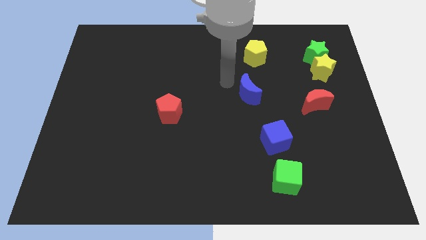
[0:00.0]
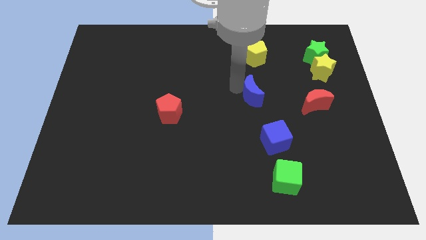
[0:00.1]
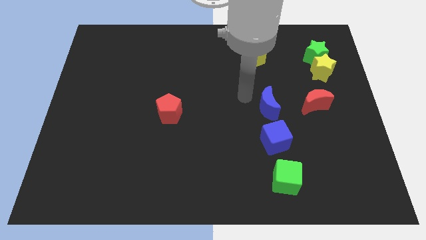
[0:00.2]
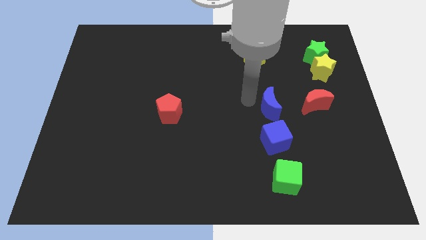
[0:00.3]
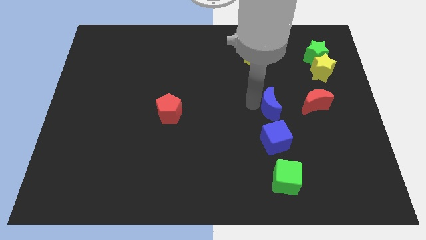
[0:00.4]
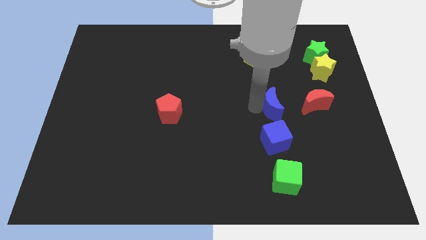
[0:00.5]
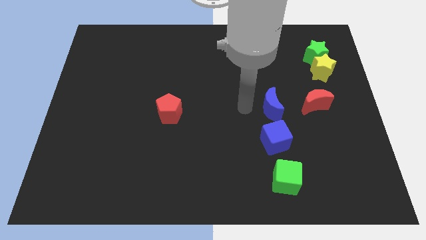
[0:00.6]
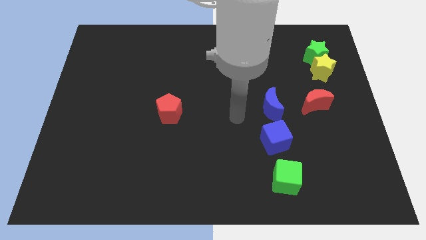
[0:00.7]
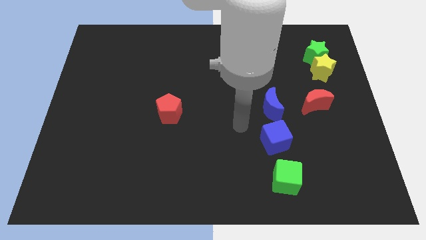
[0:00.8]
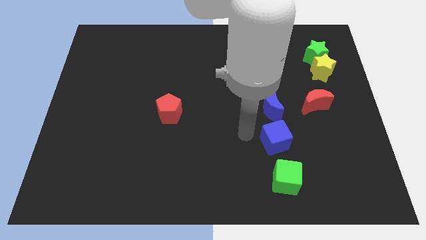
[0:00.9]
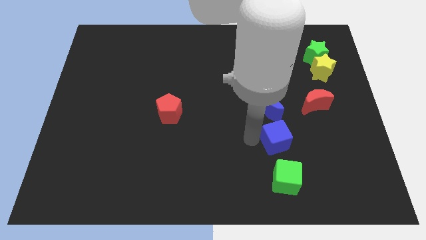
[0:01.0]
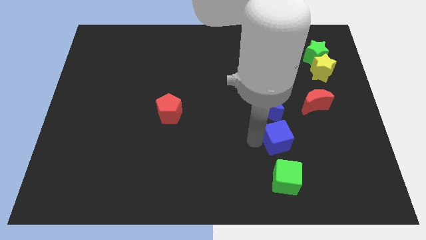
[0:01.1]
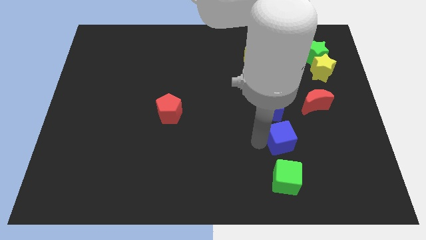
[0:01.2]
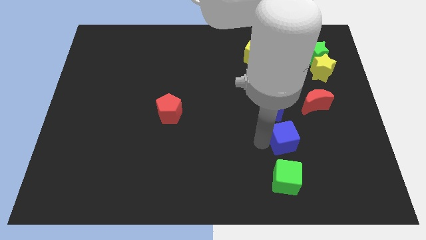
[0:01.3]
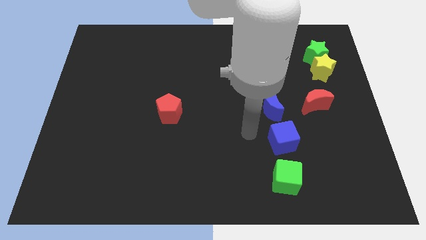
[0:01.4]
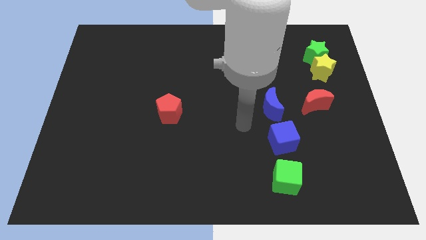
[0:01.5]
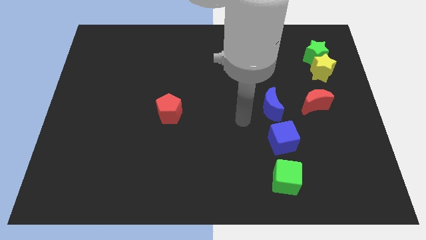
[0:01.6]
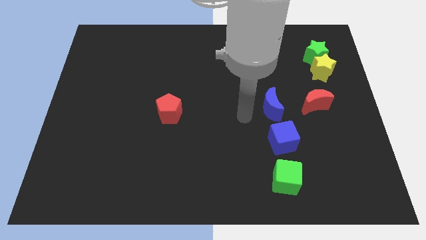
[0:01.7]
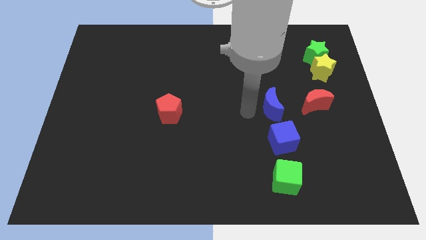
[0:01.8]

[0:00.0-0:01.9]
push blue crescent towards the blue cube

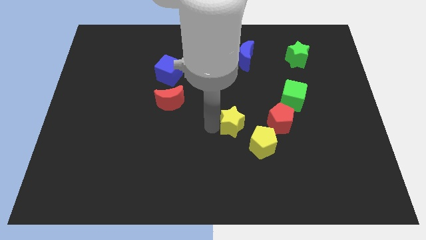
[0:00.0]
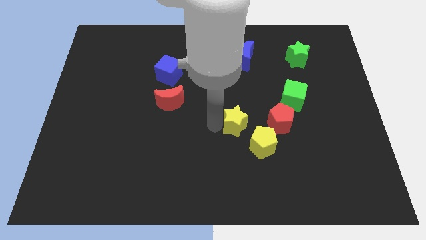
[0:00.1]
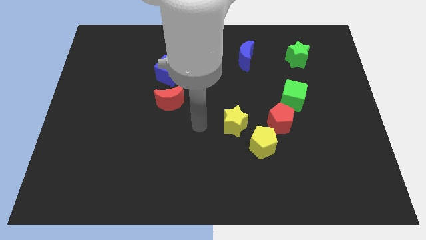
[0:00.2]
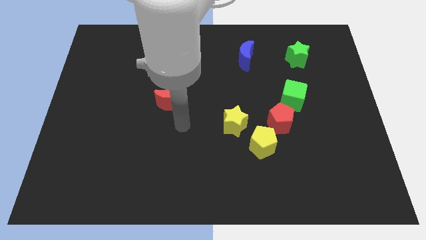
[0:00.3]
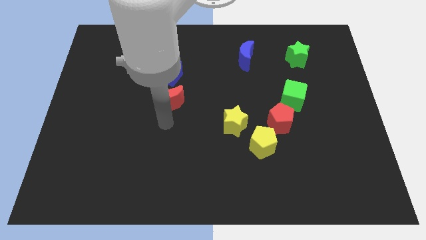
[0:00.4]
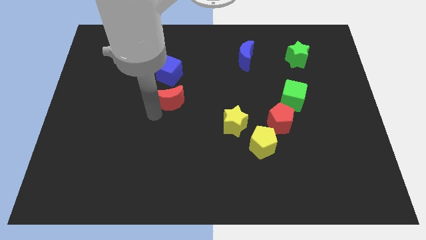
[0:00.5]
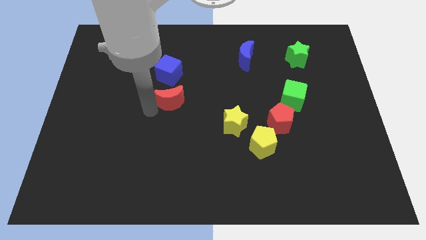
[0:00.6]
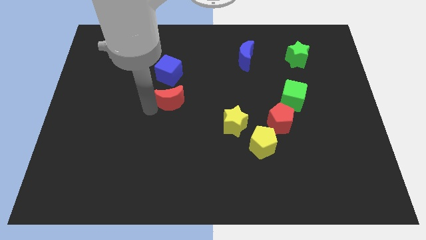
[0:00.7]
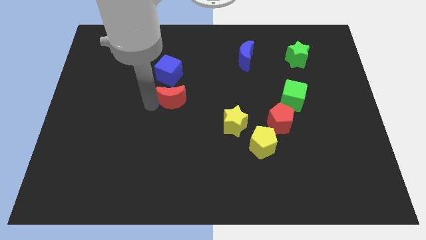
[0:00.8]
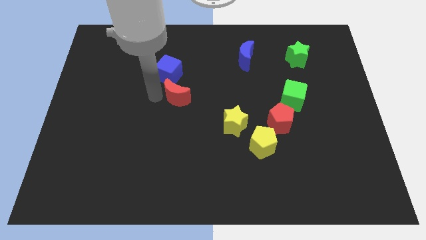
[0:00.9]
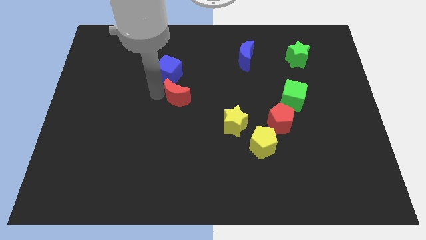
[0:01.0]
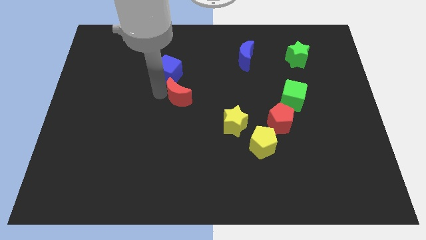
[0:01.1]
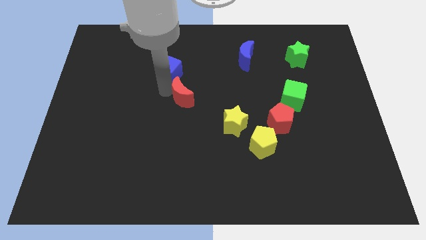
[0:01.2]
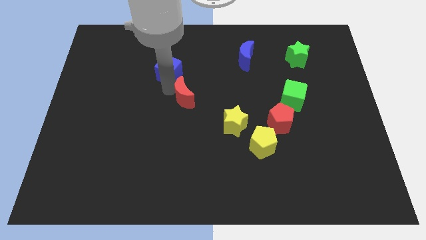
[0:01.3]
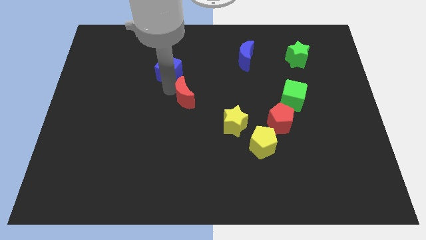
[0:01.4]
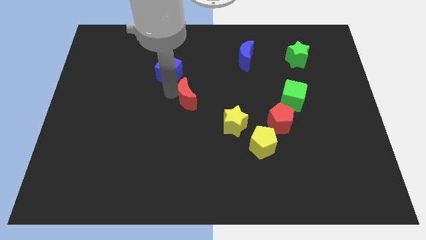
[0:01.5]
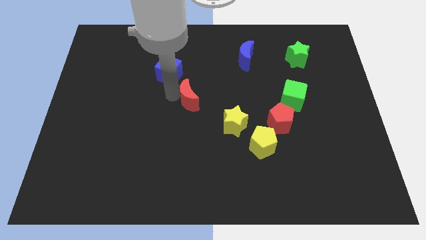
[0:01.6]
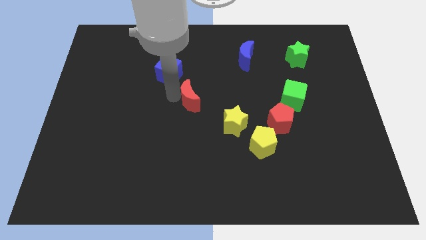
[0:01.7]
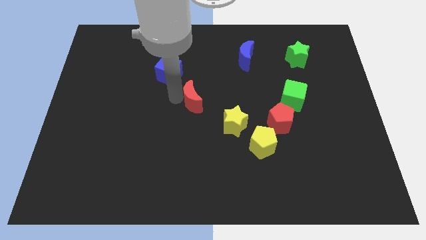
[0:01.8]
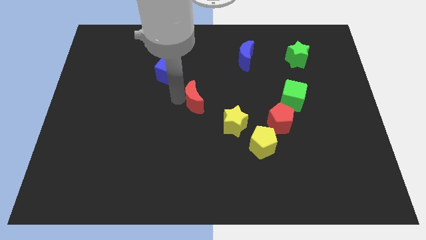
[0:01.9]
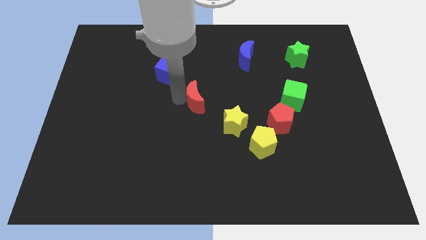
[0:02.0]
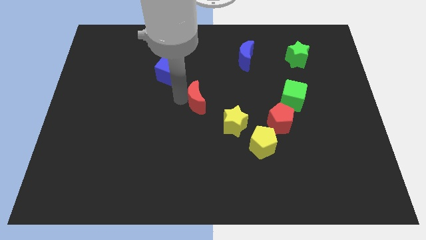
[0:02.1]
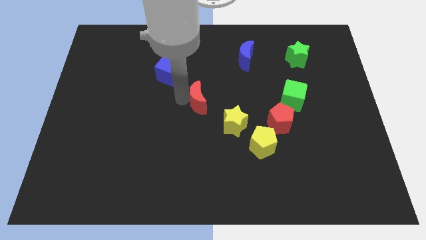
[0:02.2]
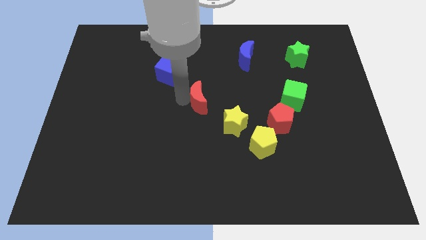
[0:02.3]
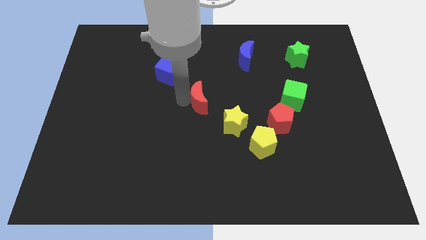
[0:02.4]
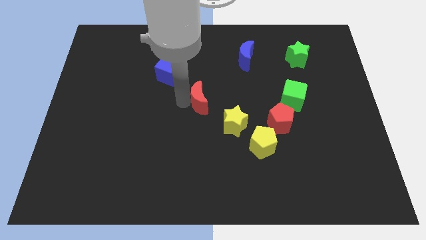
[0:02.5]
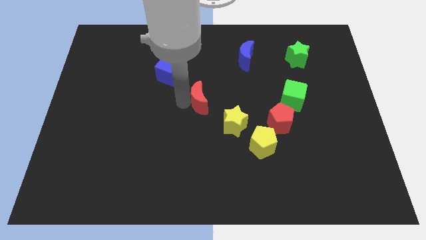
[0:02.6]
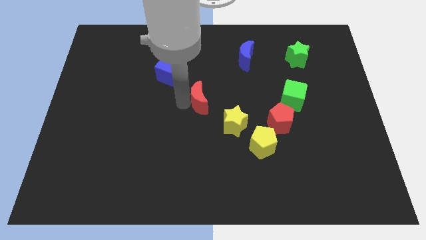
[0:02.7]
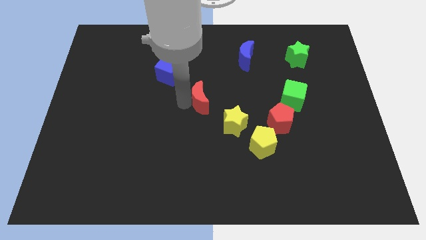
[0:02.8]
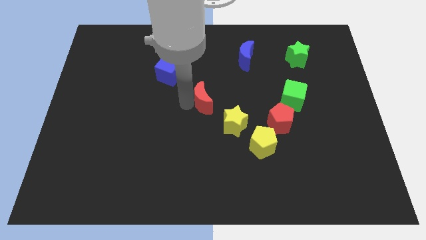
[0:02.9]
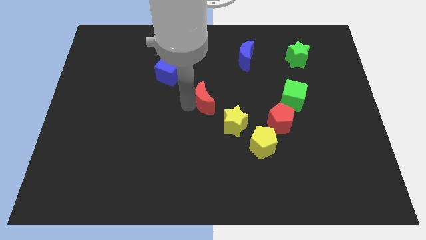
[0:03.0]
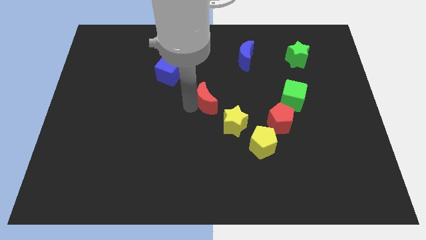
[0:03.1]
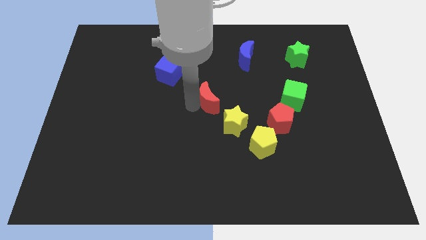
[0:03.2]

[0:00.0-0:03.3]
place the red moon in between the yellow star and blue cube

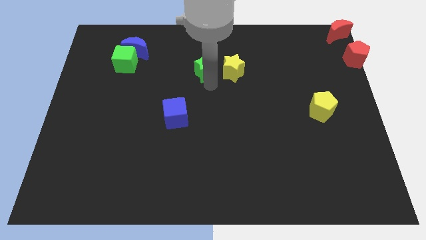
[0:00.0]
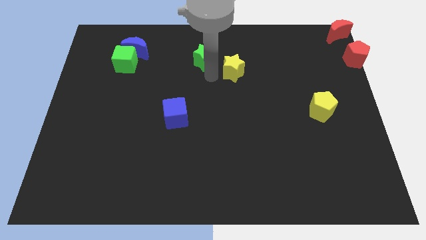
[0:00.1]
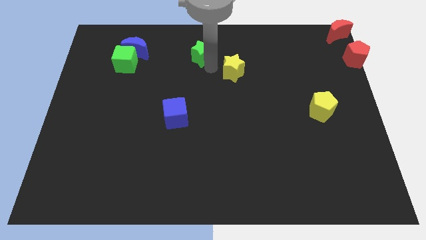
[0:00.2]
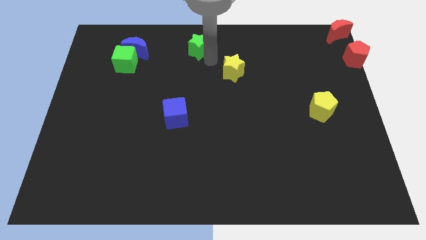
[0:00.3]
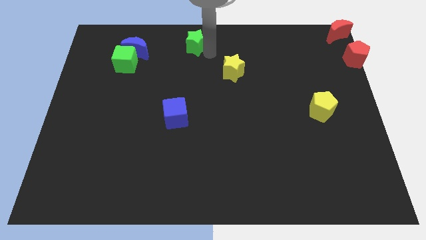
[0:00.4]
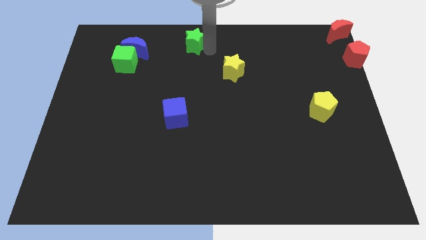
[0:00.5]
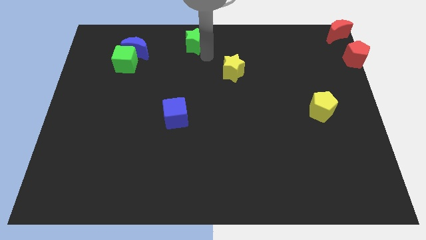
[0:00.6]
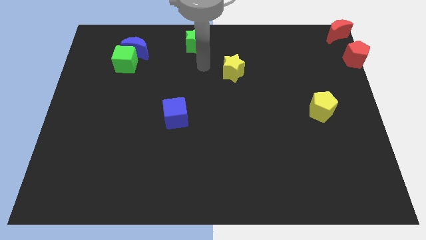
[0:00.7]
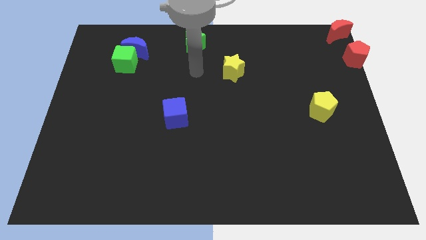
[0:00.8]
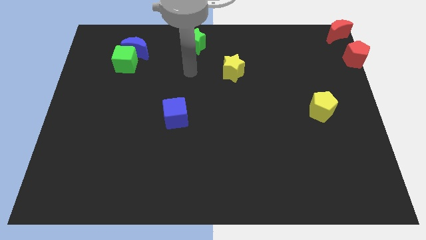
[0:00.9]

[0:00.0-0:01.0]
push the green star towards the top center of the board

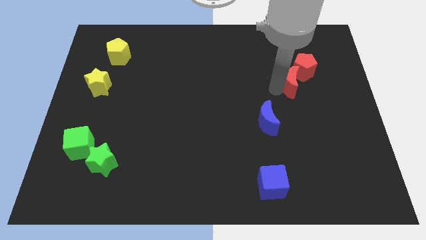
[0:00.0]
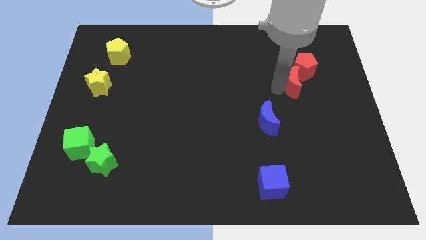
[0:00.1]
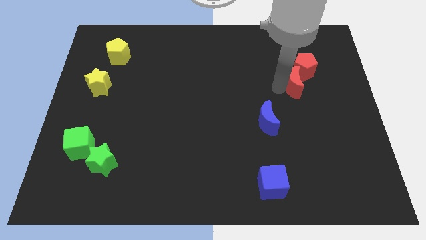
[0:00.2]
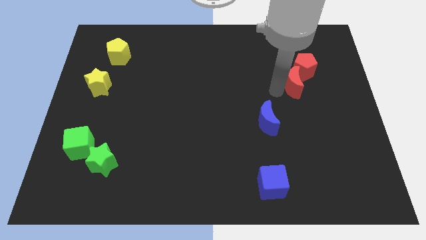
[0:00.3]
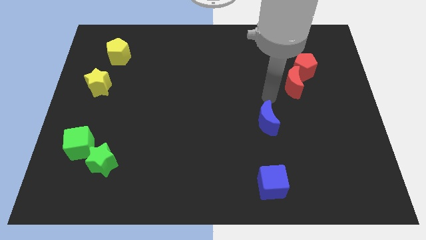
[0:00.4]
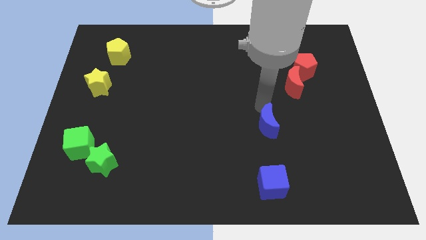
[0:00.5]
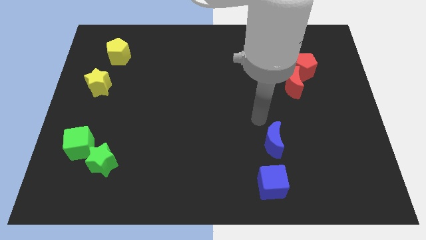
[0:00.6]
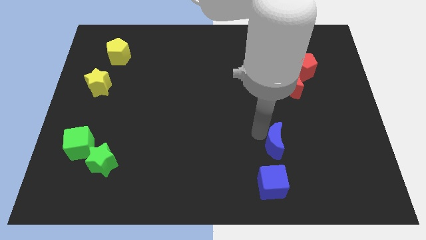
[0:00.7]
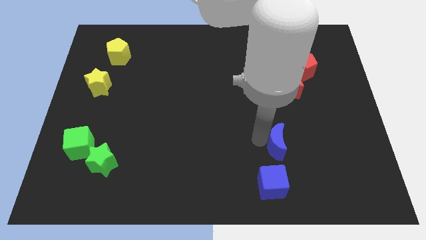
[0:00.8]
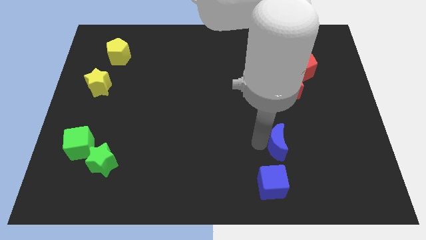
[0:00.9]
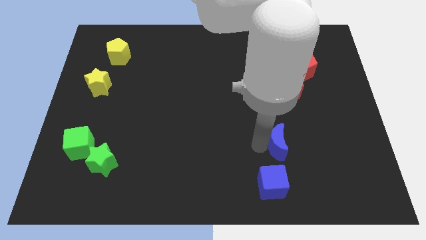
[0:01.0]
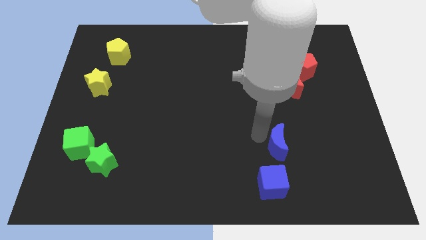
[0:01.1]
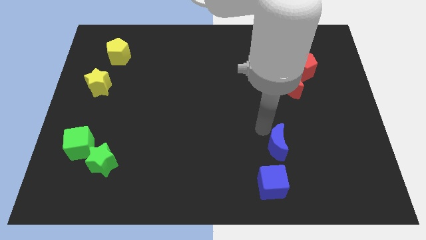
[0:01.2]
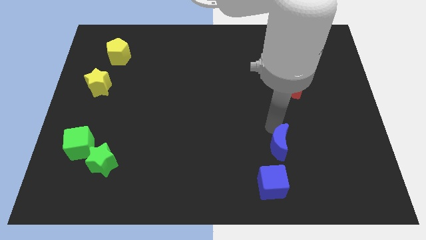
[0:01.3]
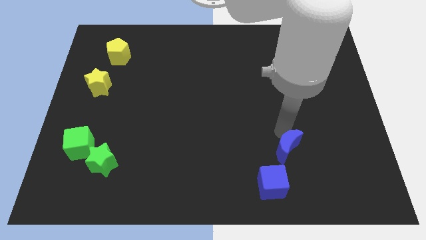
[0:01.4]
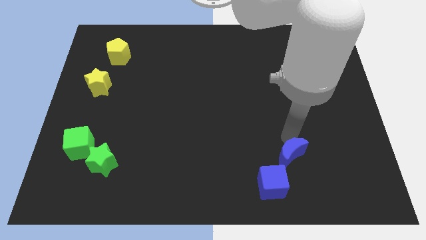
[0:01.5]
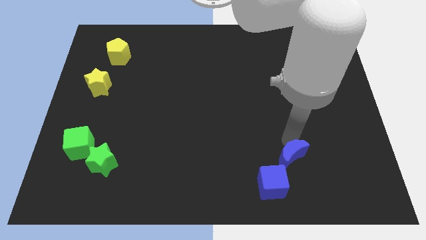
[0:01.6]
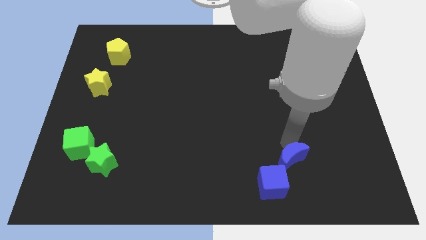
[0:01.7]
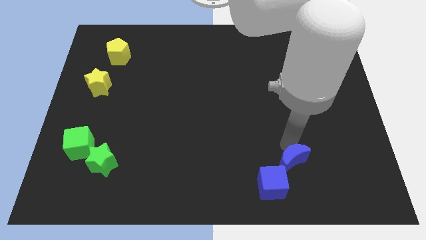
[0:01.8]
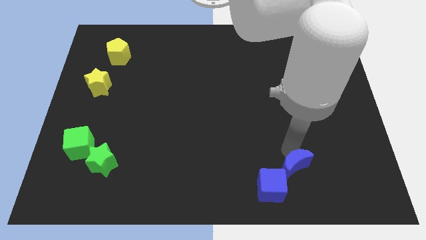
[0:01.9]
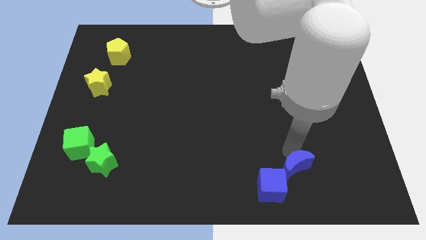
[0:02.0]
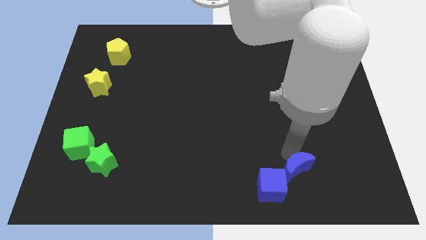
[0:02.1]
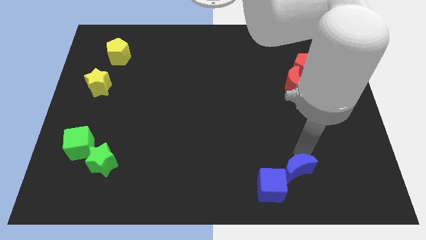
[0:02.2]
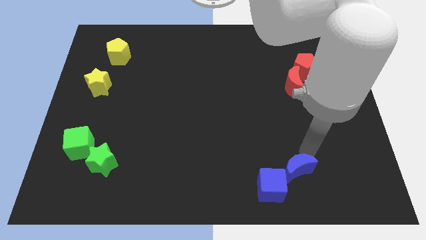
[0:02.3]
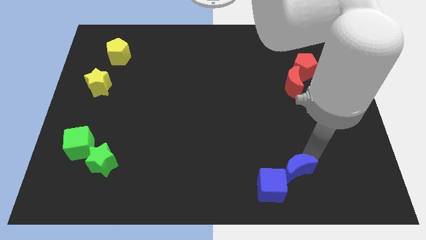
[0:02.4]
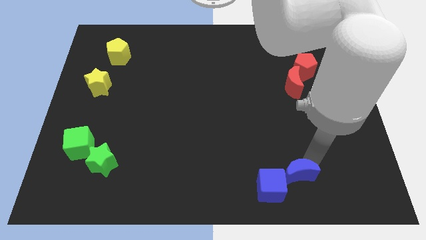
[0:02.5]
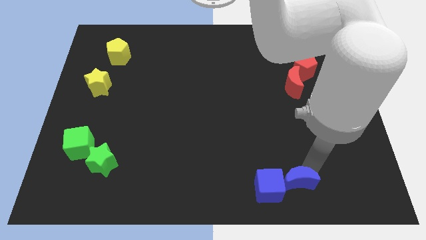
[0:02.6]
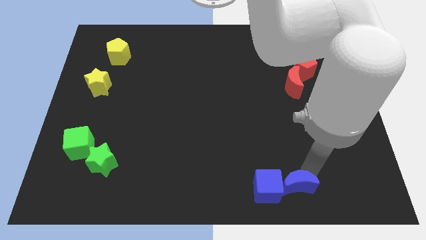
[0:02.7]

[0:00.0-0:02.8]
push blue moon to the right of the blue cube
